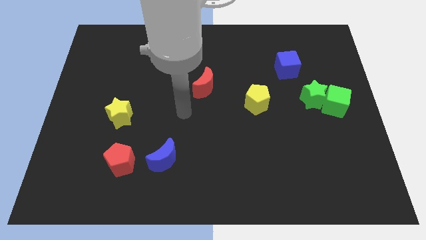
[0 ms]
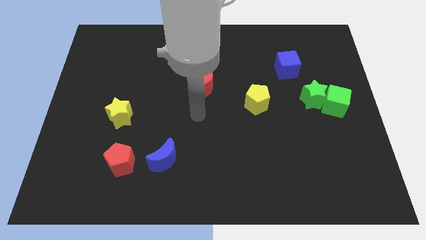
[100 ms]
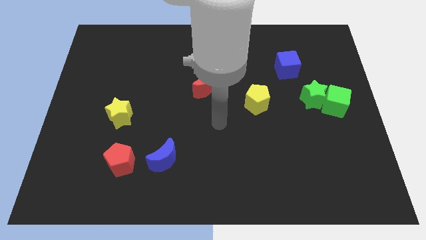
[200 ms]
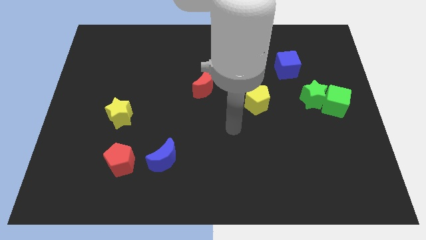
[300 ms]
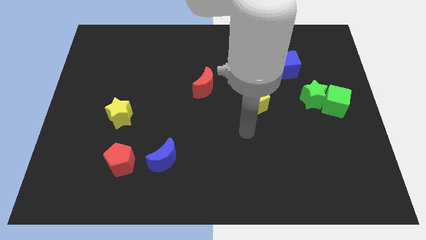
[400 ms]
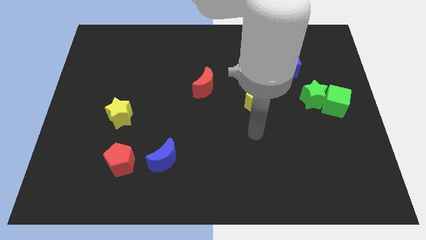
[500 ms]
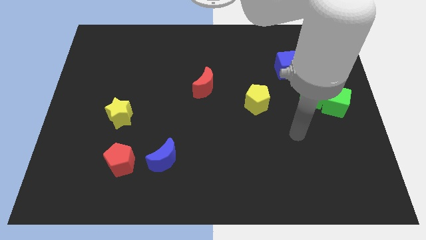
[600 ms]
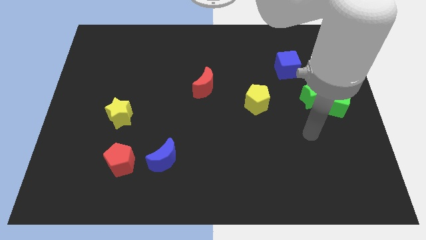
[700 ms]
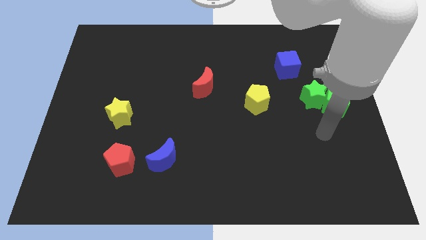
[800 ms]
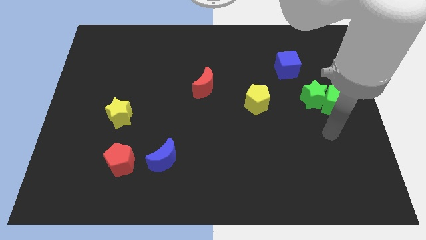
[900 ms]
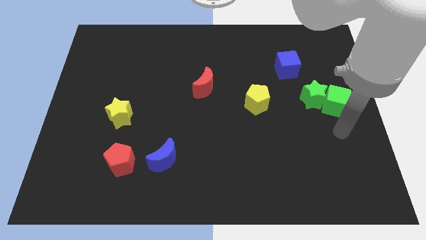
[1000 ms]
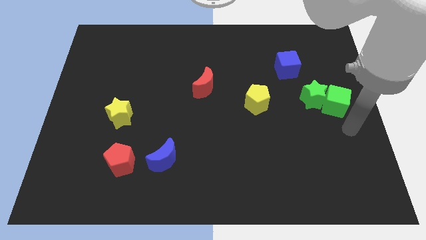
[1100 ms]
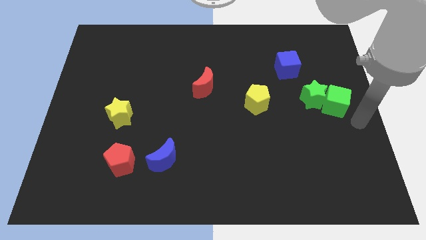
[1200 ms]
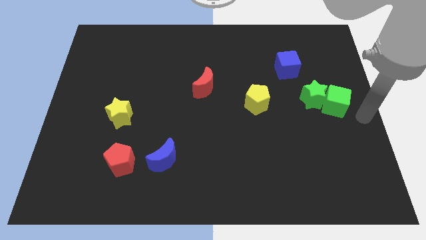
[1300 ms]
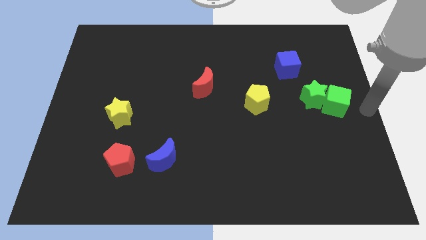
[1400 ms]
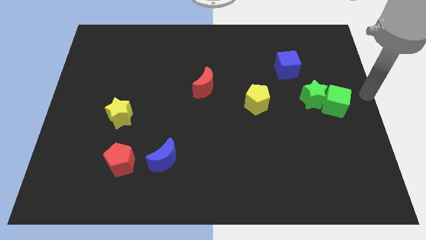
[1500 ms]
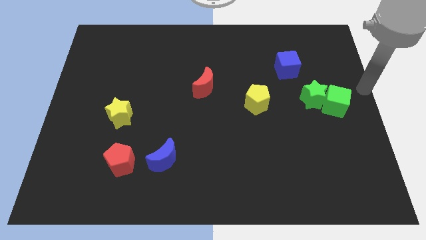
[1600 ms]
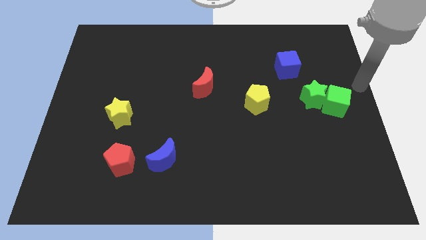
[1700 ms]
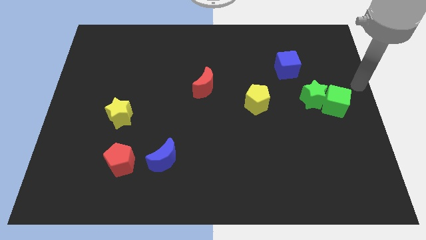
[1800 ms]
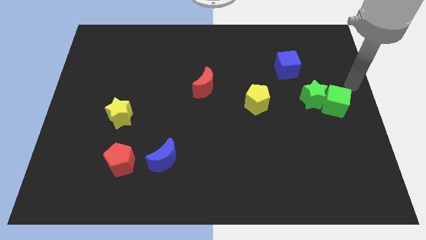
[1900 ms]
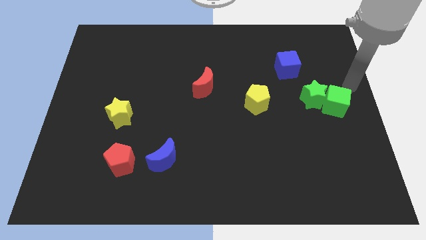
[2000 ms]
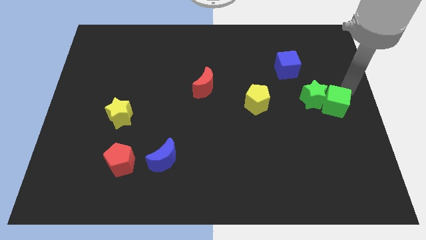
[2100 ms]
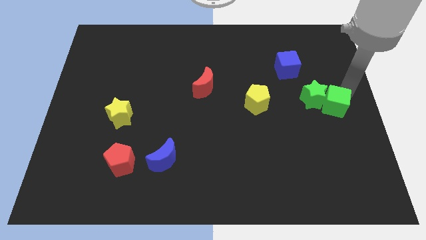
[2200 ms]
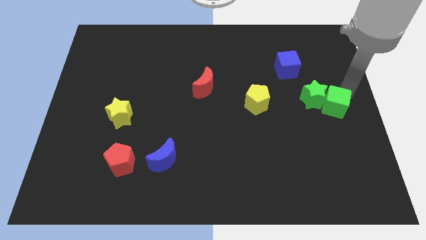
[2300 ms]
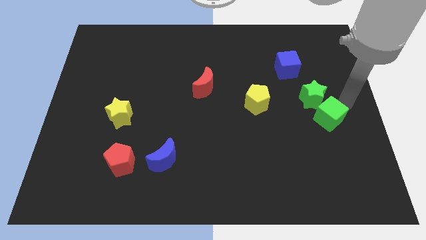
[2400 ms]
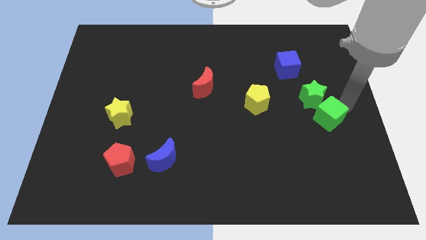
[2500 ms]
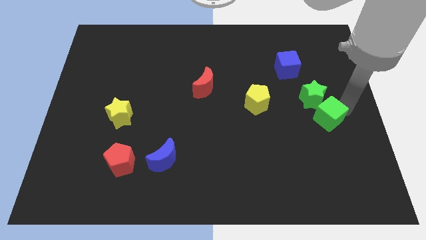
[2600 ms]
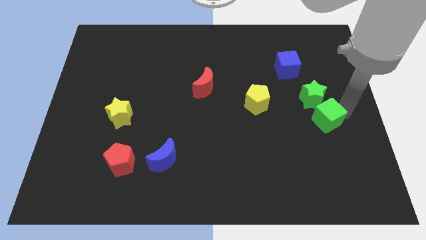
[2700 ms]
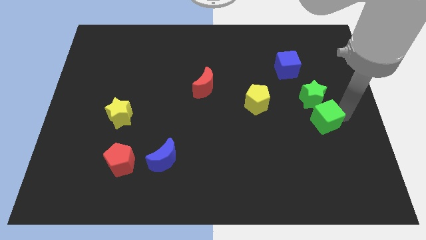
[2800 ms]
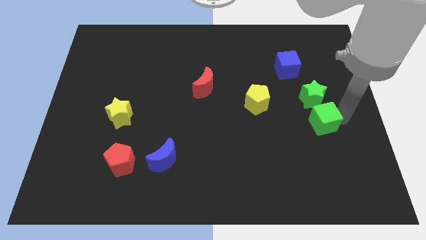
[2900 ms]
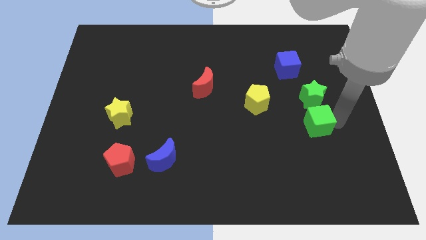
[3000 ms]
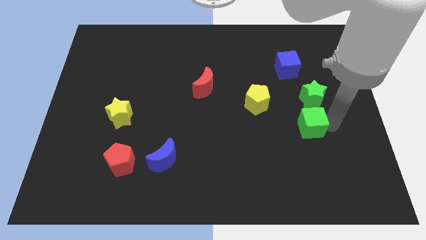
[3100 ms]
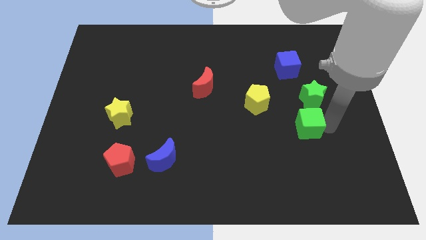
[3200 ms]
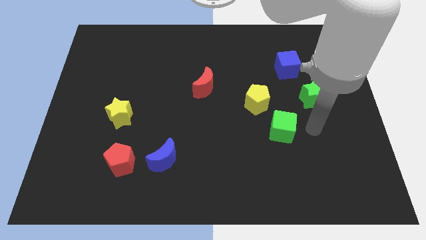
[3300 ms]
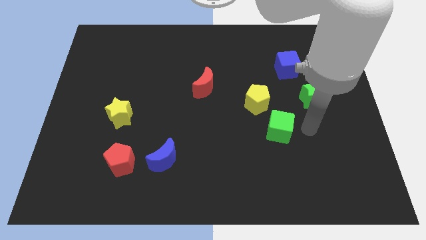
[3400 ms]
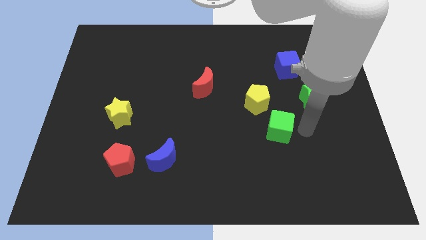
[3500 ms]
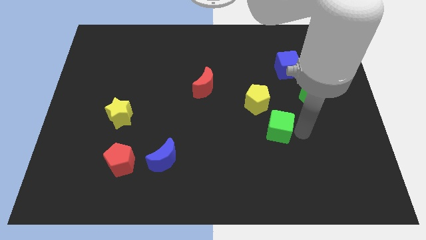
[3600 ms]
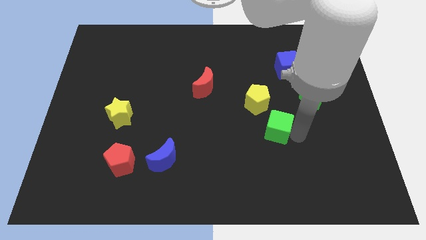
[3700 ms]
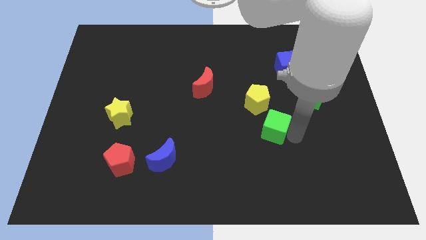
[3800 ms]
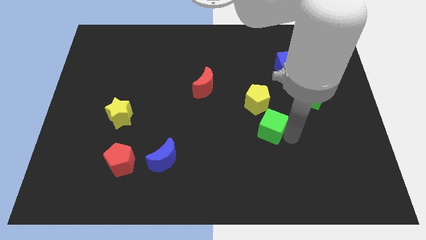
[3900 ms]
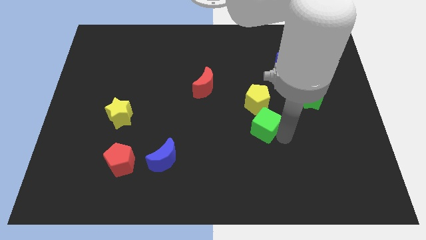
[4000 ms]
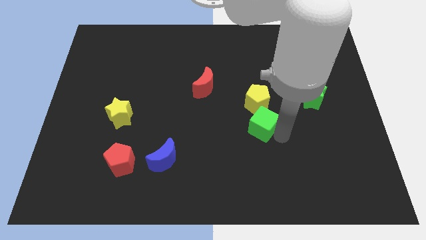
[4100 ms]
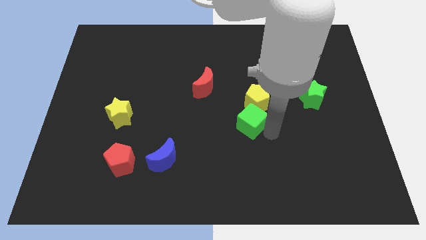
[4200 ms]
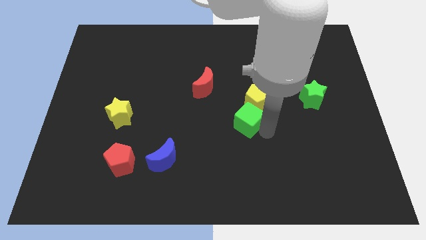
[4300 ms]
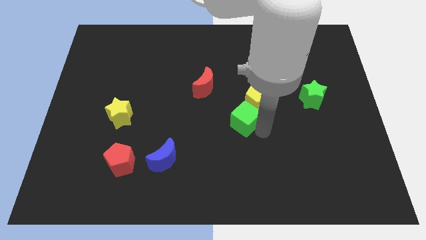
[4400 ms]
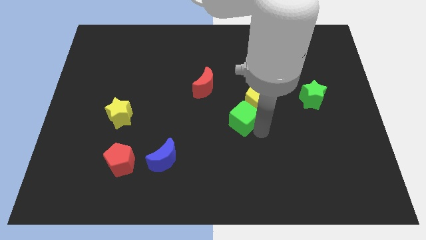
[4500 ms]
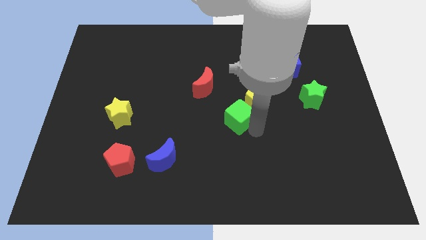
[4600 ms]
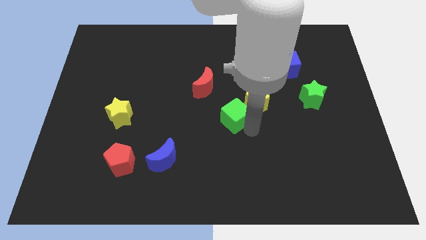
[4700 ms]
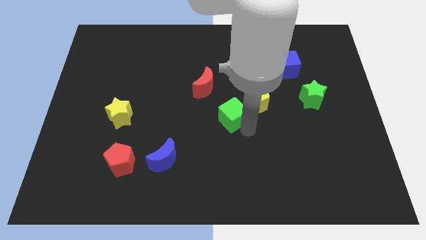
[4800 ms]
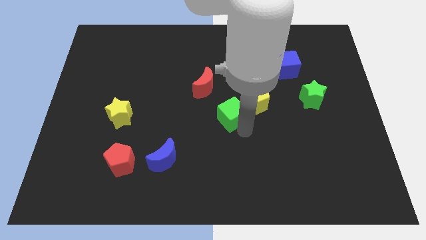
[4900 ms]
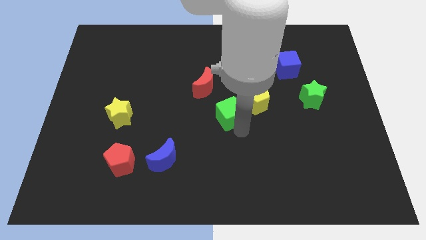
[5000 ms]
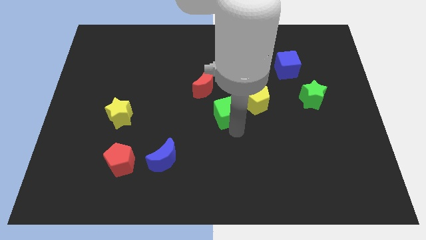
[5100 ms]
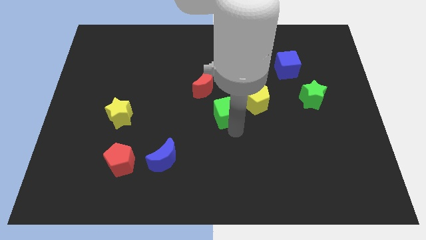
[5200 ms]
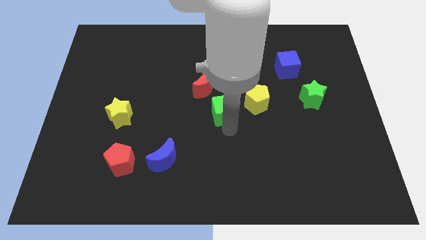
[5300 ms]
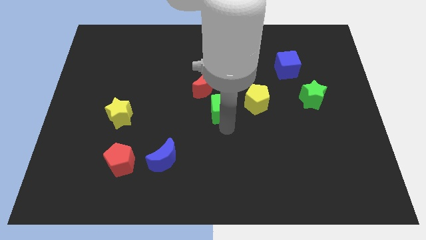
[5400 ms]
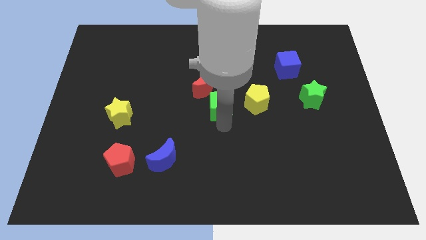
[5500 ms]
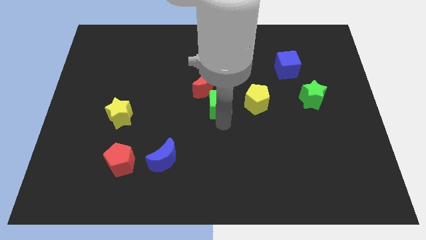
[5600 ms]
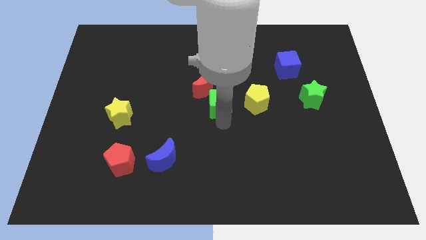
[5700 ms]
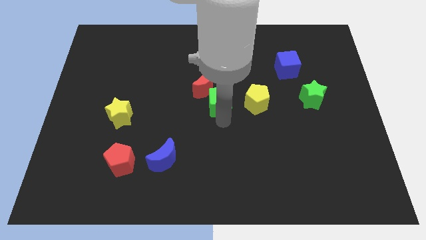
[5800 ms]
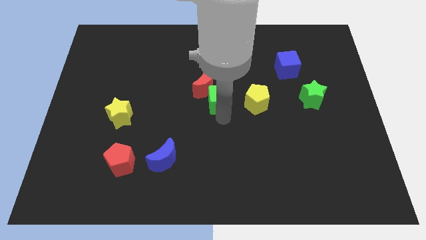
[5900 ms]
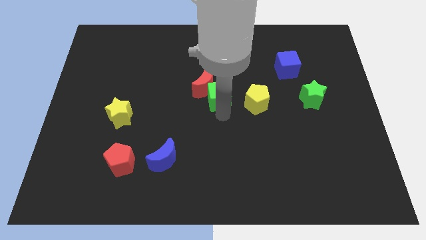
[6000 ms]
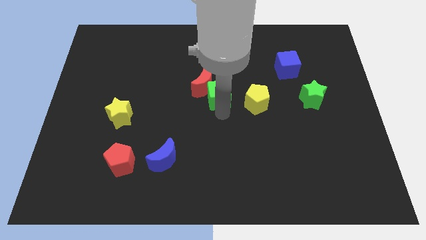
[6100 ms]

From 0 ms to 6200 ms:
put the green cube to the red moon

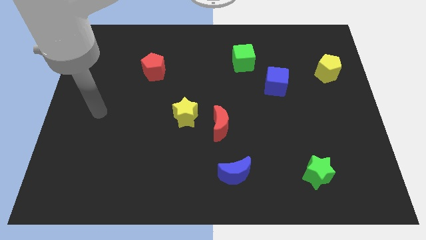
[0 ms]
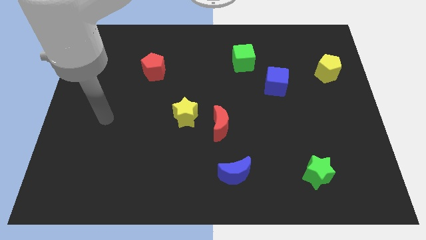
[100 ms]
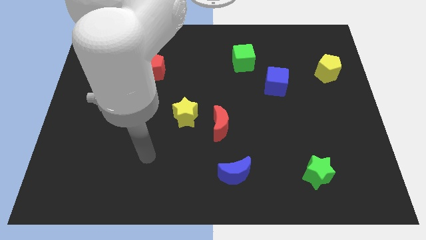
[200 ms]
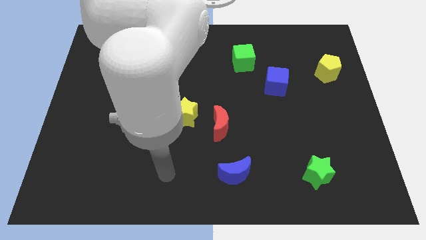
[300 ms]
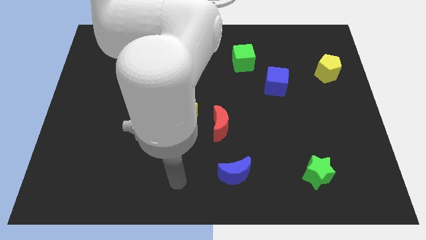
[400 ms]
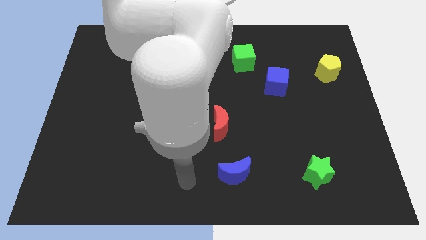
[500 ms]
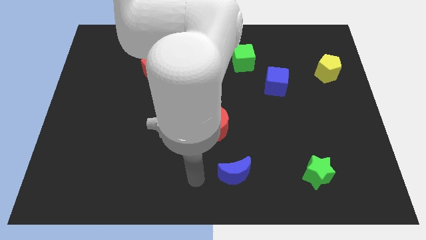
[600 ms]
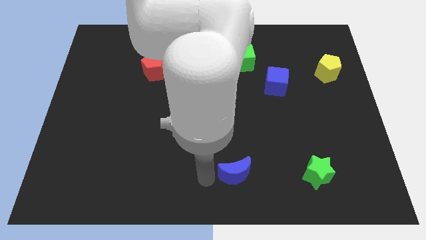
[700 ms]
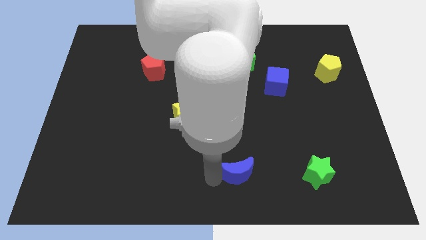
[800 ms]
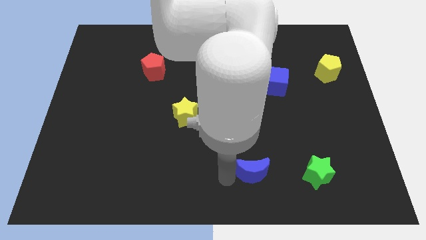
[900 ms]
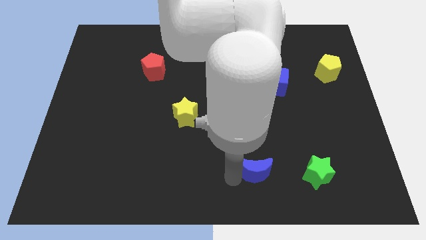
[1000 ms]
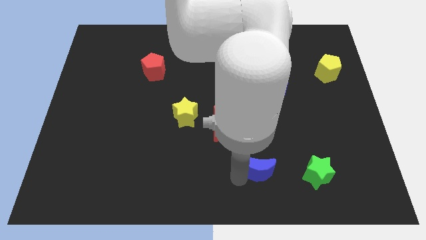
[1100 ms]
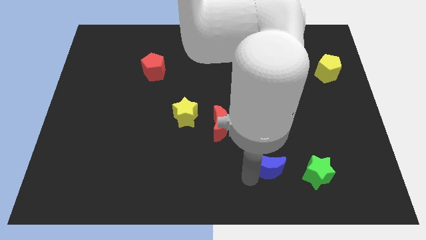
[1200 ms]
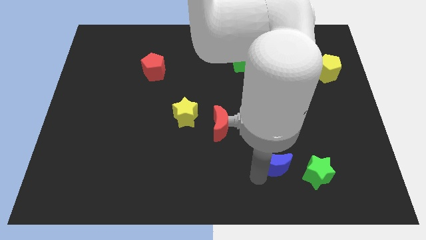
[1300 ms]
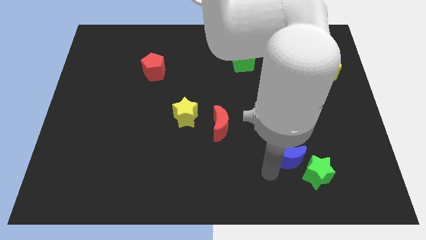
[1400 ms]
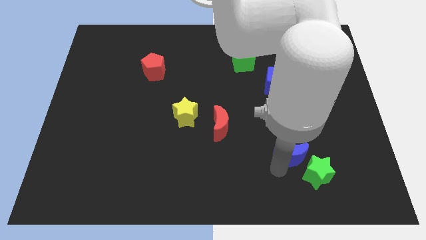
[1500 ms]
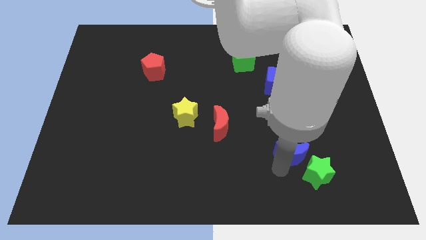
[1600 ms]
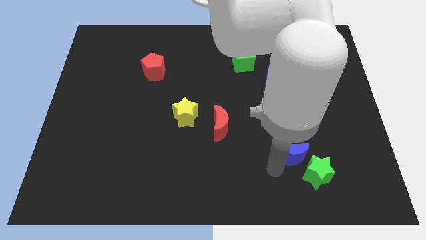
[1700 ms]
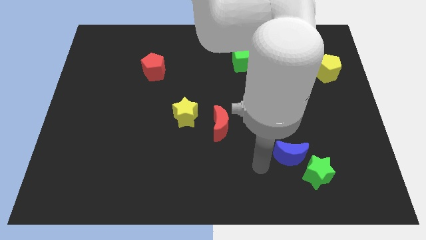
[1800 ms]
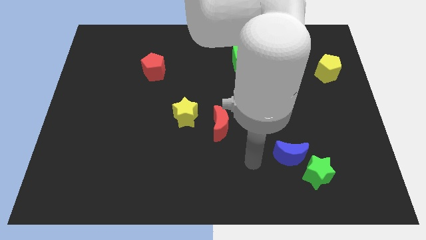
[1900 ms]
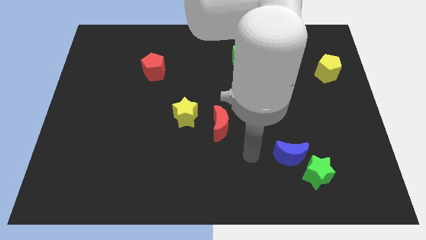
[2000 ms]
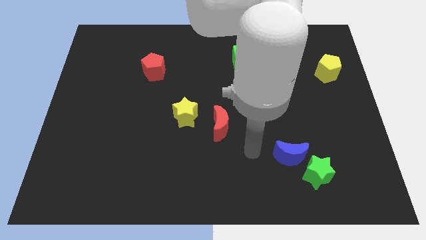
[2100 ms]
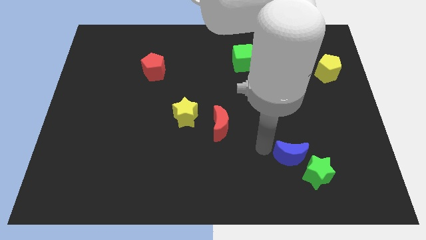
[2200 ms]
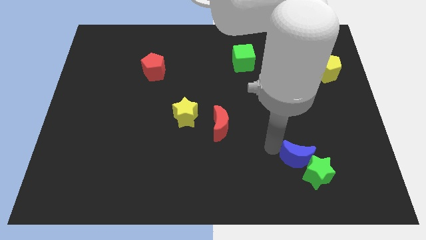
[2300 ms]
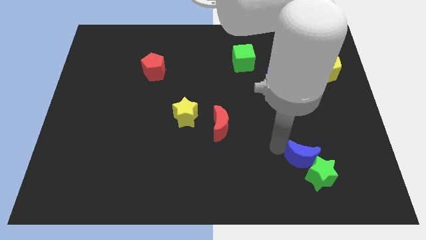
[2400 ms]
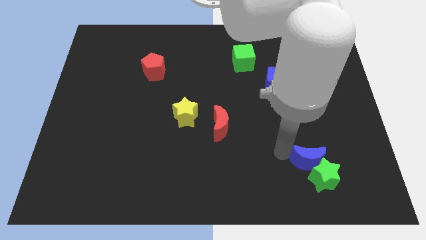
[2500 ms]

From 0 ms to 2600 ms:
push the blue moon to the green star
